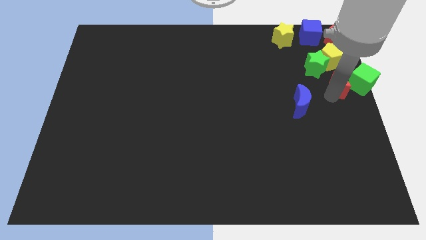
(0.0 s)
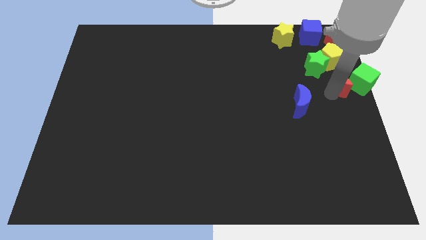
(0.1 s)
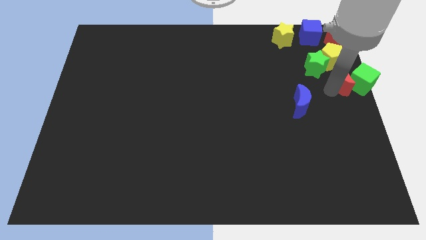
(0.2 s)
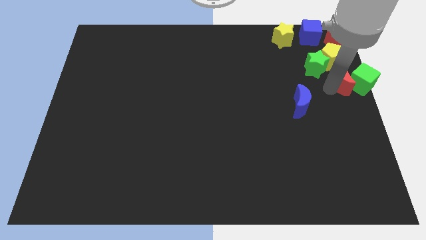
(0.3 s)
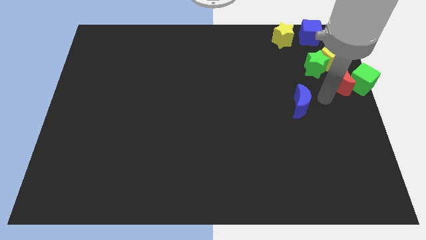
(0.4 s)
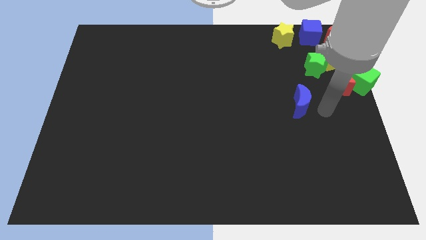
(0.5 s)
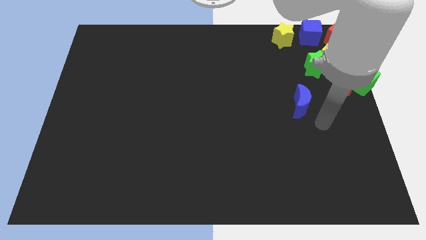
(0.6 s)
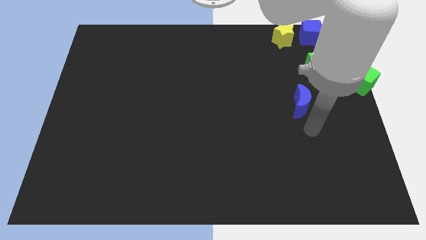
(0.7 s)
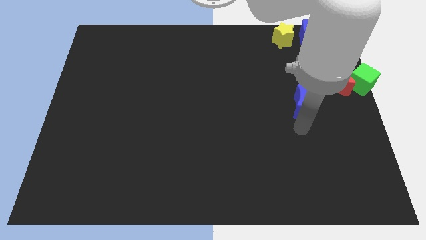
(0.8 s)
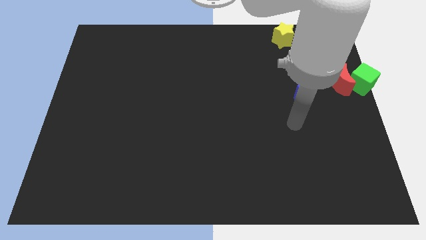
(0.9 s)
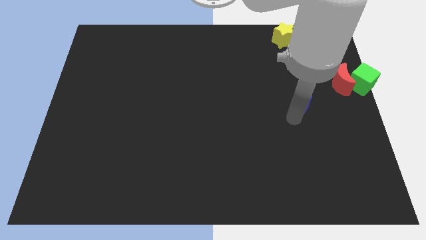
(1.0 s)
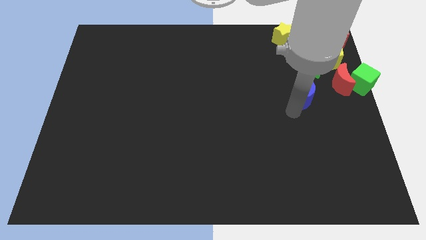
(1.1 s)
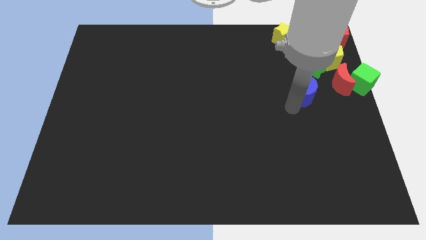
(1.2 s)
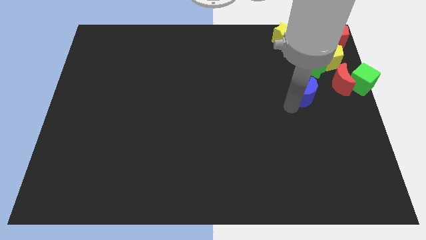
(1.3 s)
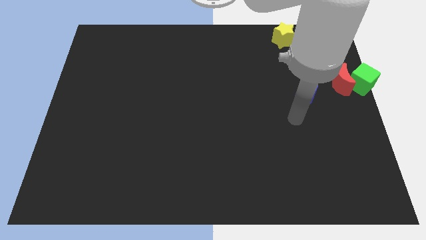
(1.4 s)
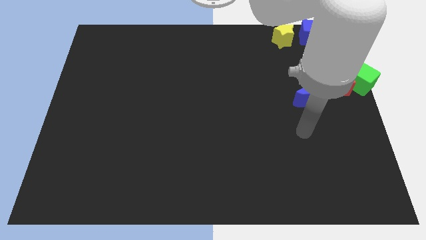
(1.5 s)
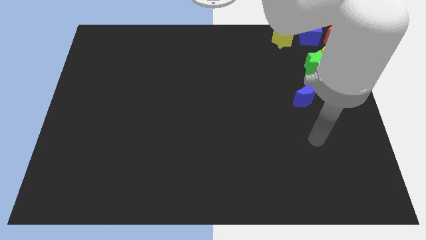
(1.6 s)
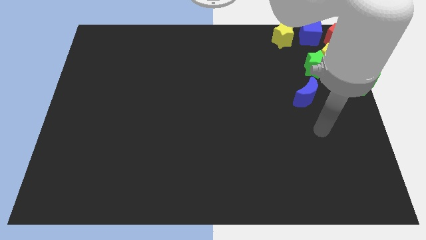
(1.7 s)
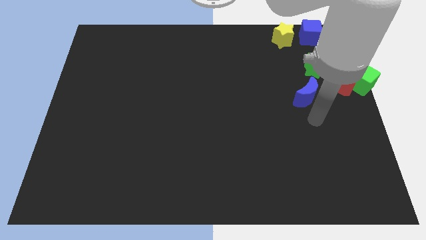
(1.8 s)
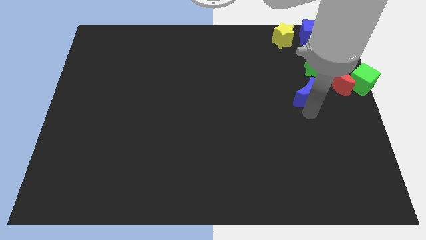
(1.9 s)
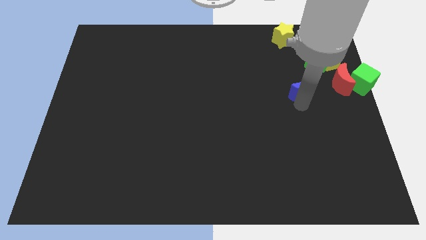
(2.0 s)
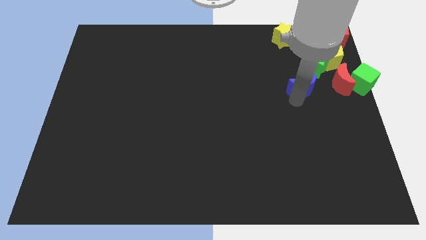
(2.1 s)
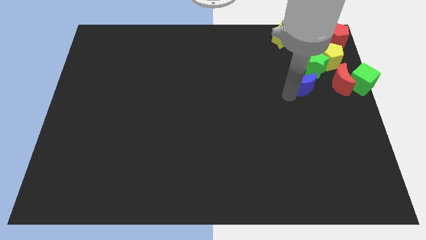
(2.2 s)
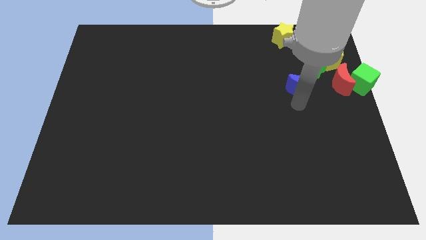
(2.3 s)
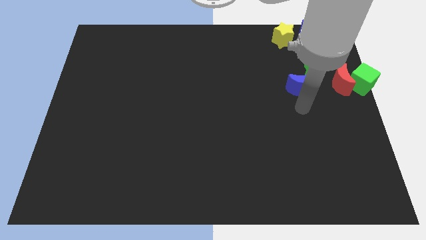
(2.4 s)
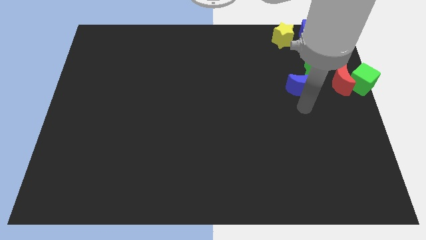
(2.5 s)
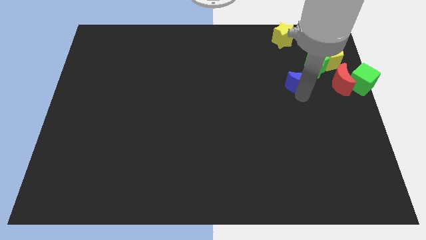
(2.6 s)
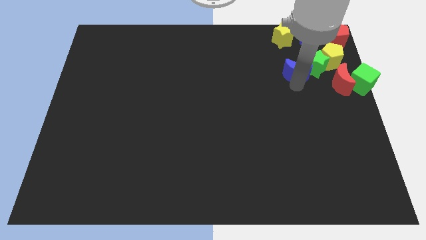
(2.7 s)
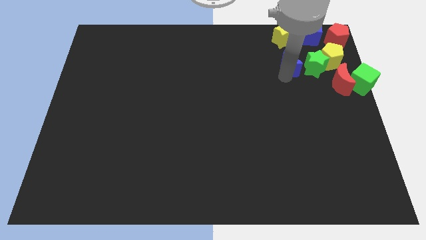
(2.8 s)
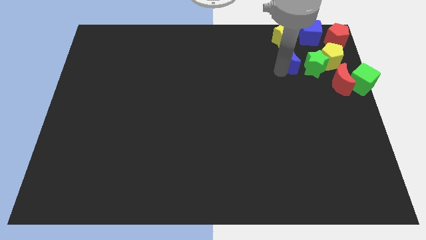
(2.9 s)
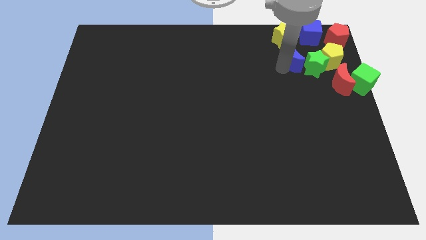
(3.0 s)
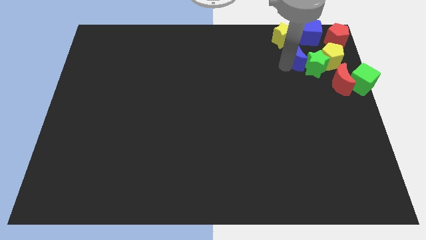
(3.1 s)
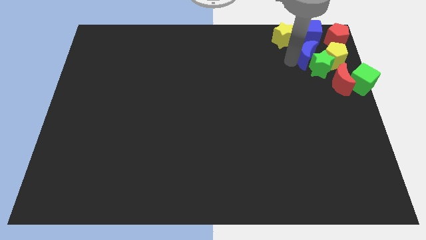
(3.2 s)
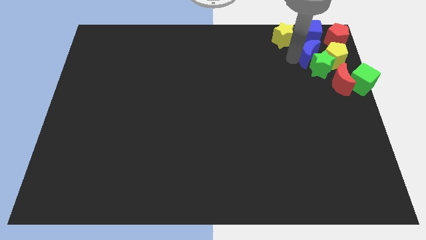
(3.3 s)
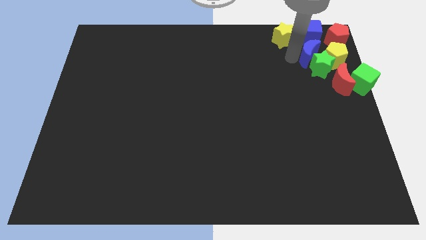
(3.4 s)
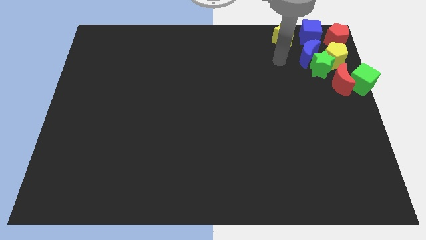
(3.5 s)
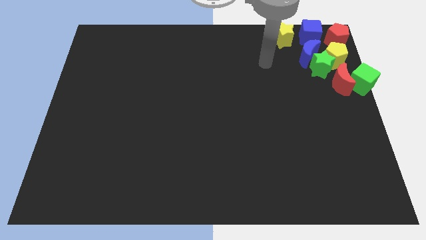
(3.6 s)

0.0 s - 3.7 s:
push the blue moon down to the blue cube

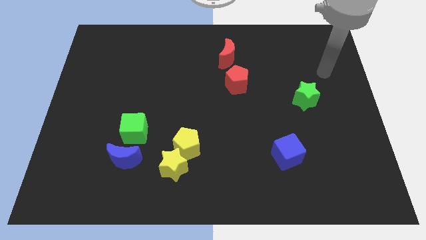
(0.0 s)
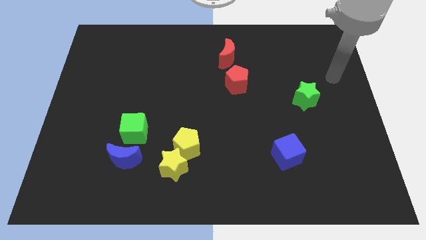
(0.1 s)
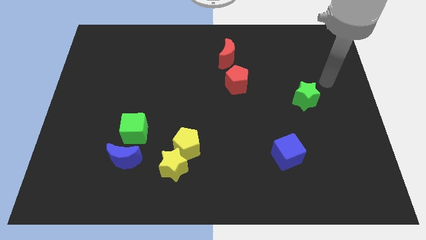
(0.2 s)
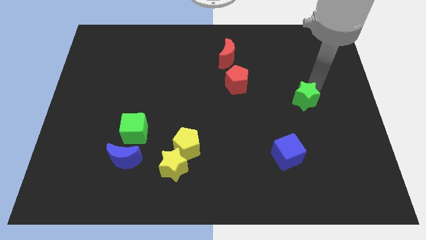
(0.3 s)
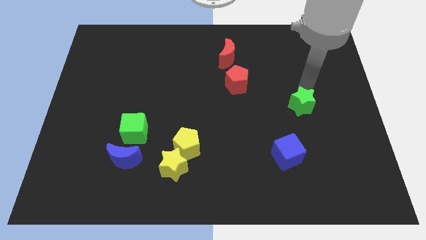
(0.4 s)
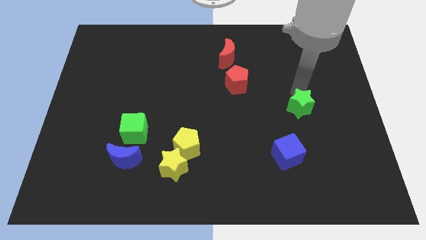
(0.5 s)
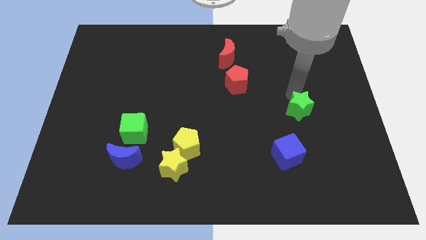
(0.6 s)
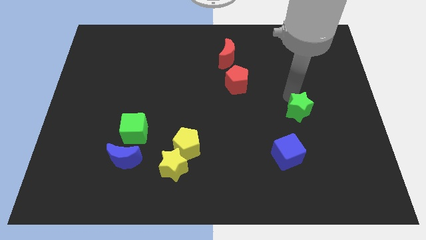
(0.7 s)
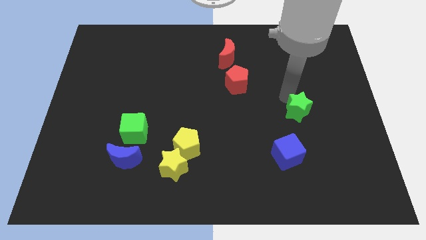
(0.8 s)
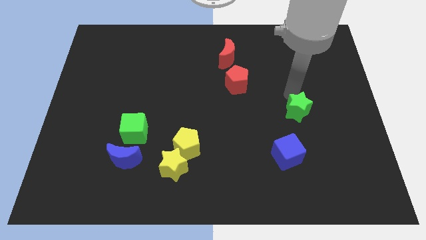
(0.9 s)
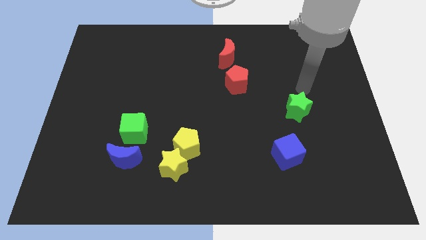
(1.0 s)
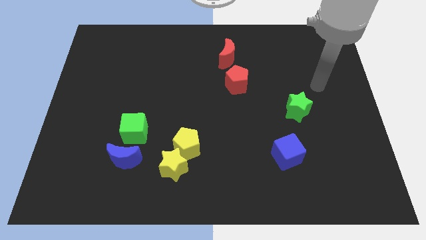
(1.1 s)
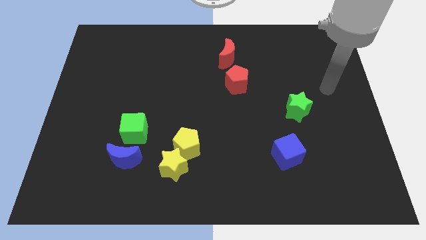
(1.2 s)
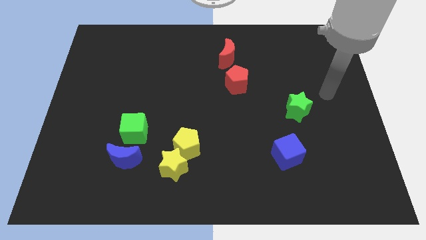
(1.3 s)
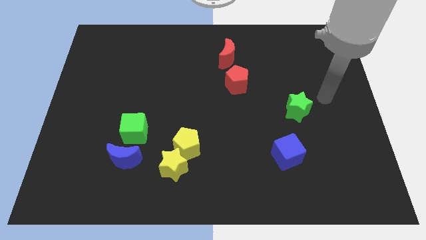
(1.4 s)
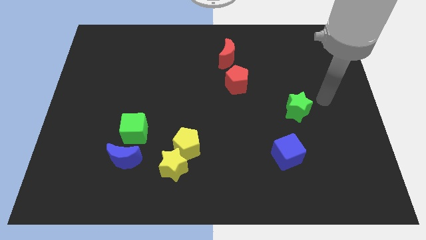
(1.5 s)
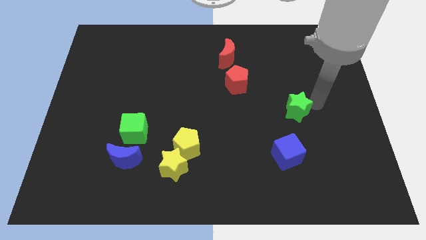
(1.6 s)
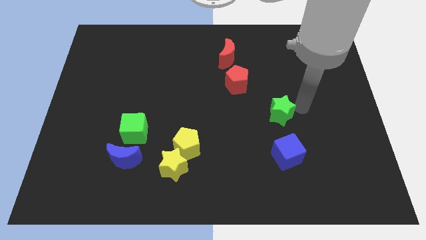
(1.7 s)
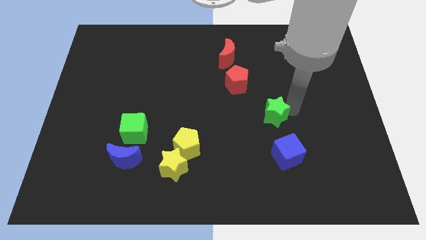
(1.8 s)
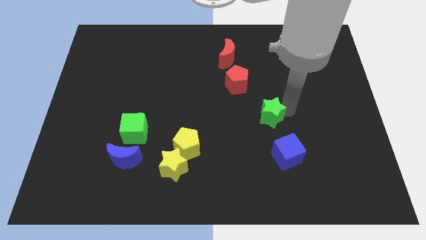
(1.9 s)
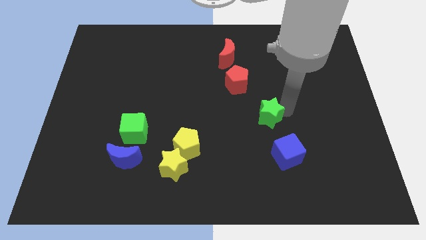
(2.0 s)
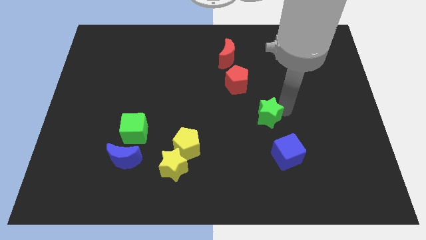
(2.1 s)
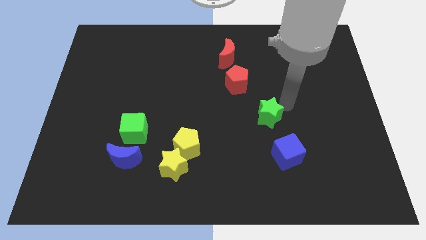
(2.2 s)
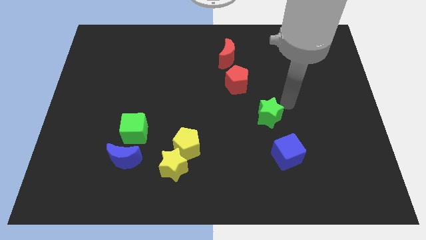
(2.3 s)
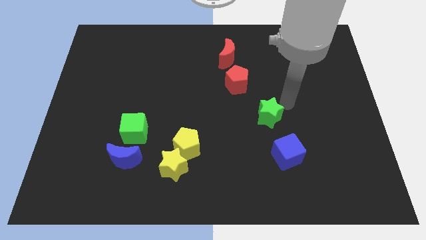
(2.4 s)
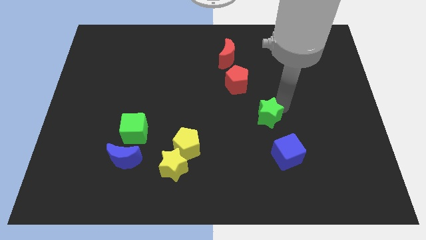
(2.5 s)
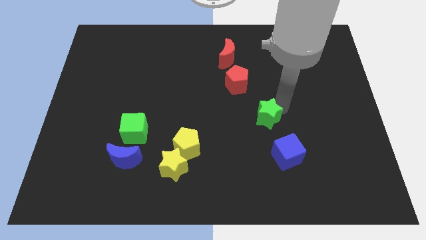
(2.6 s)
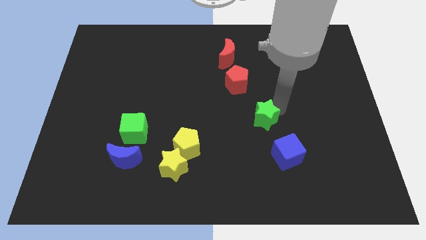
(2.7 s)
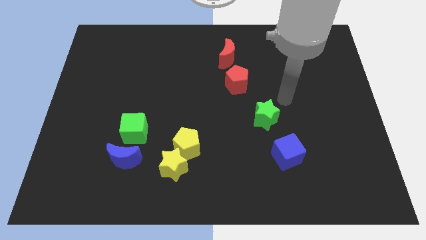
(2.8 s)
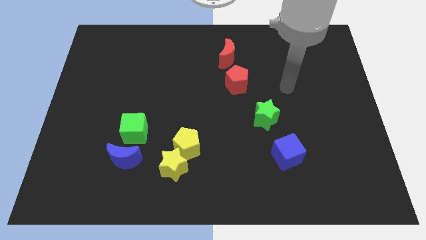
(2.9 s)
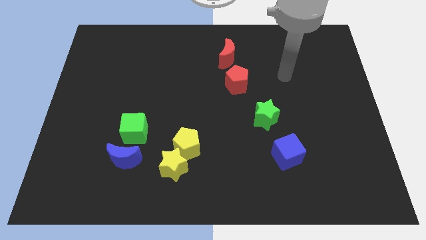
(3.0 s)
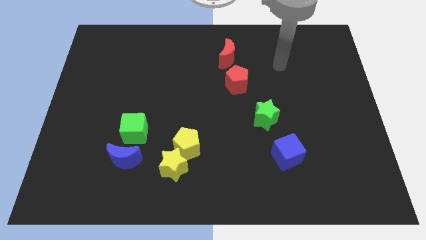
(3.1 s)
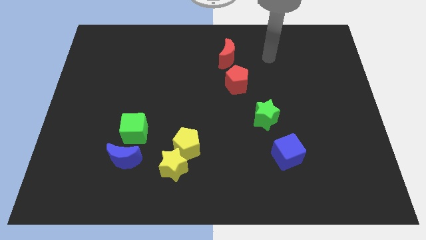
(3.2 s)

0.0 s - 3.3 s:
place the green star diagonal to red pentagon

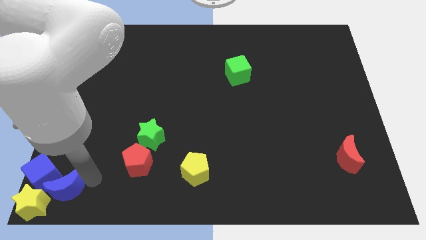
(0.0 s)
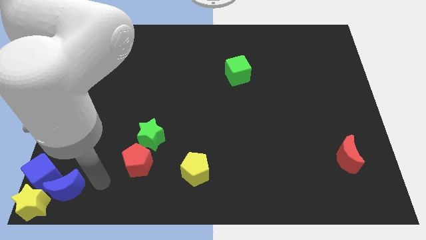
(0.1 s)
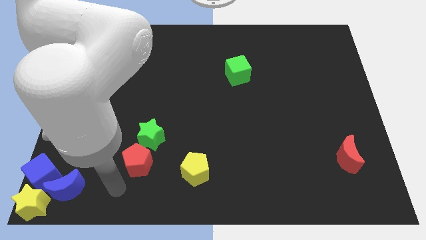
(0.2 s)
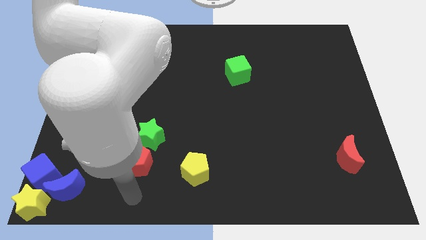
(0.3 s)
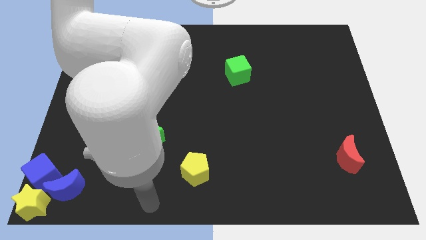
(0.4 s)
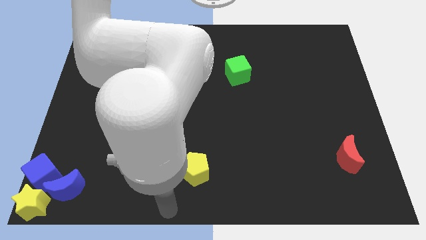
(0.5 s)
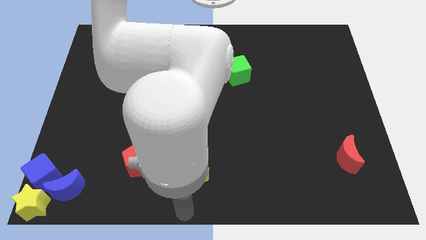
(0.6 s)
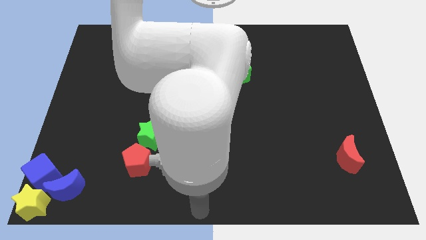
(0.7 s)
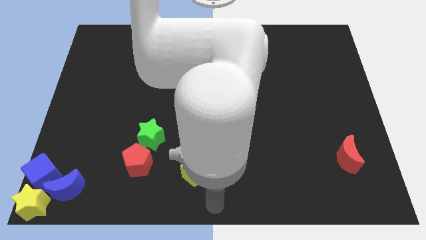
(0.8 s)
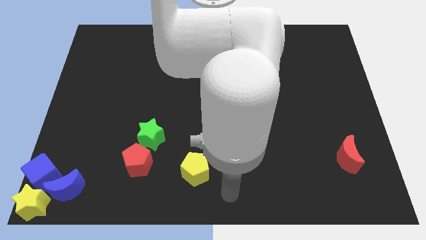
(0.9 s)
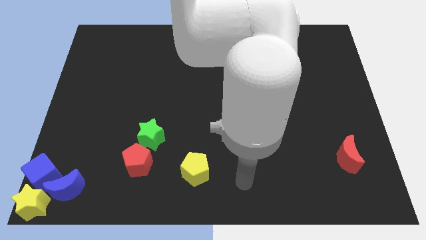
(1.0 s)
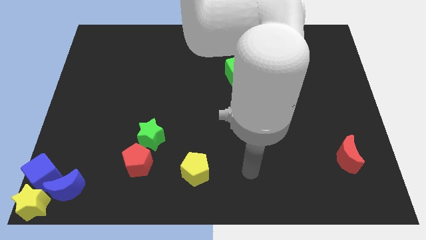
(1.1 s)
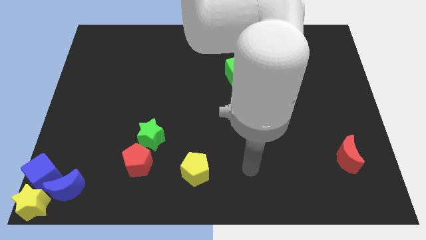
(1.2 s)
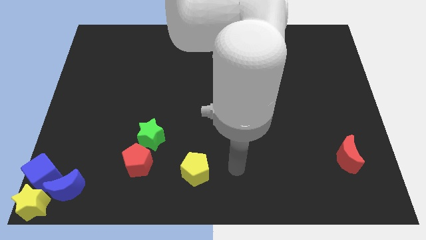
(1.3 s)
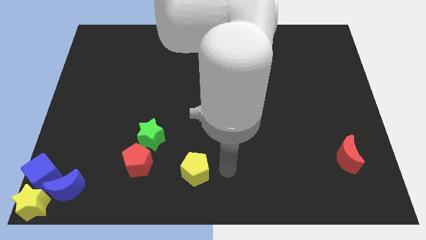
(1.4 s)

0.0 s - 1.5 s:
move away from the blue cube

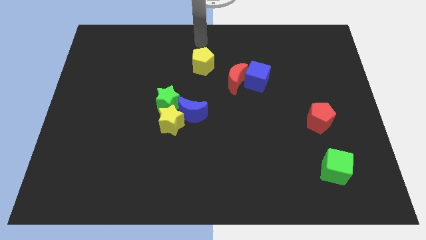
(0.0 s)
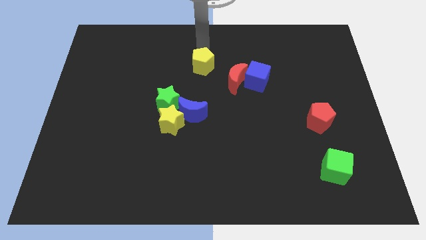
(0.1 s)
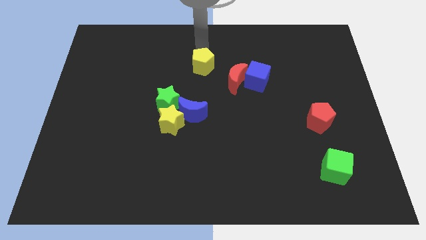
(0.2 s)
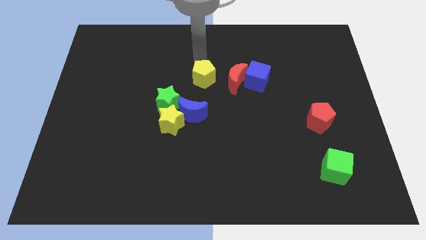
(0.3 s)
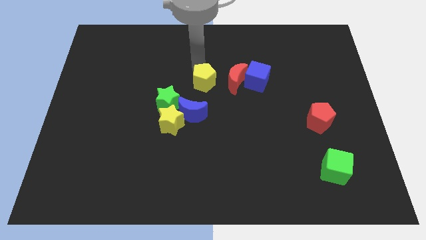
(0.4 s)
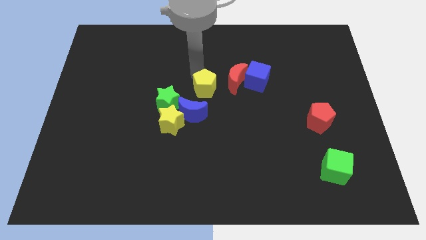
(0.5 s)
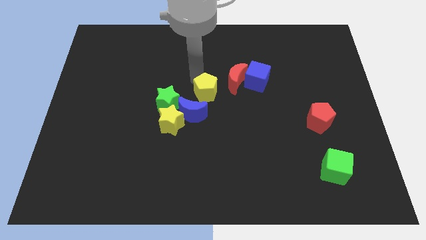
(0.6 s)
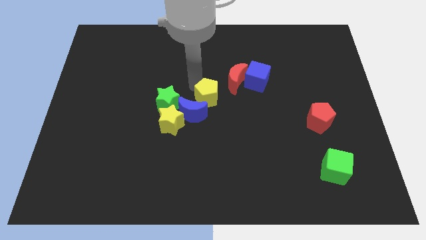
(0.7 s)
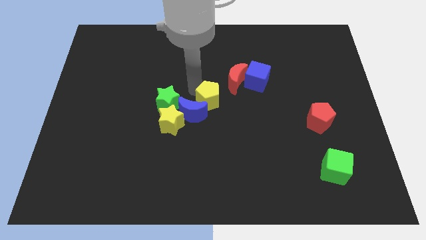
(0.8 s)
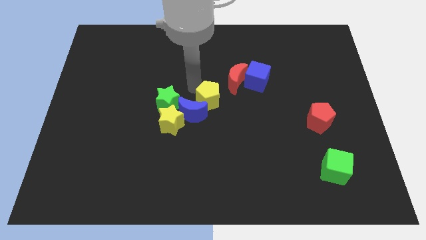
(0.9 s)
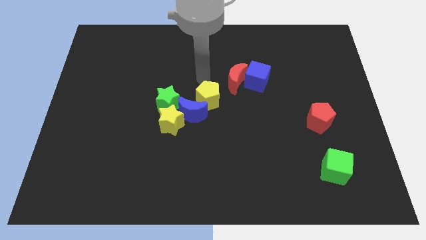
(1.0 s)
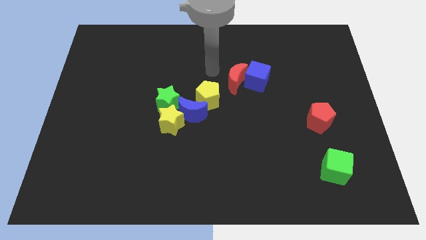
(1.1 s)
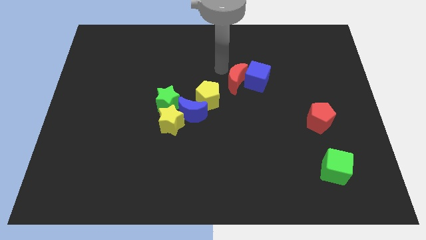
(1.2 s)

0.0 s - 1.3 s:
slide the yellow pentagon slightly towards down
